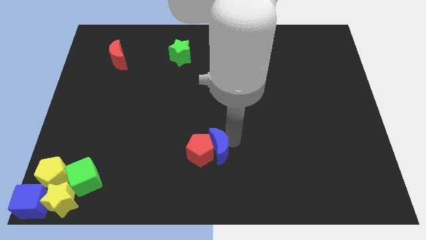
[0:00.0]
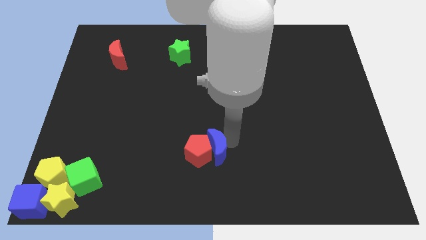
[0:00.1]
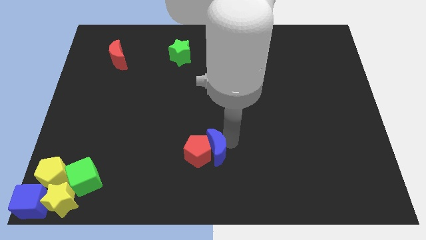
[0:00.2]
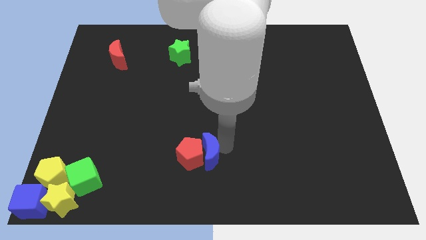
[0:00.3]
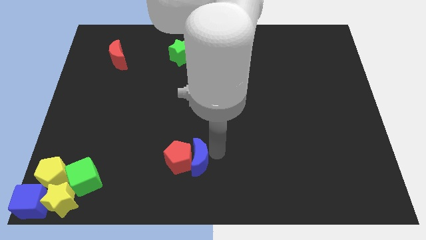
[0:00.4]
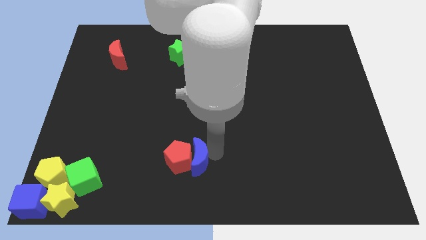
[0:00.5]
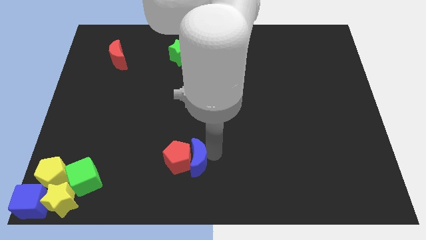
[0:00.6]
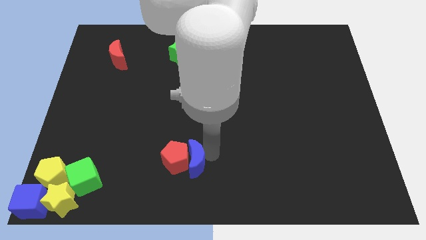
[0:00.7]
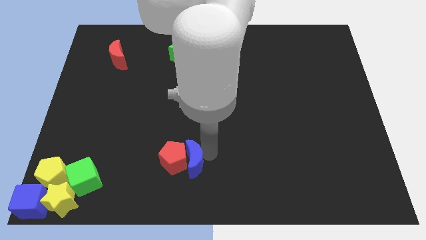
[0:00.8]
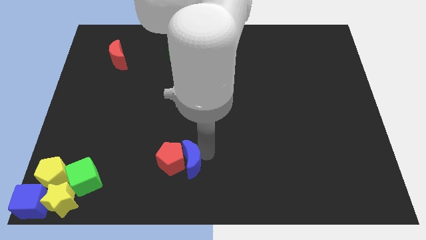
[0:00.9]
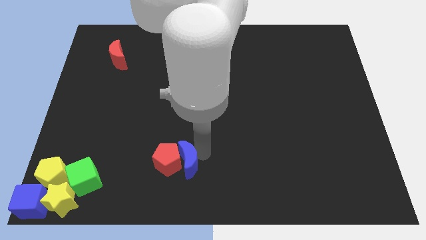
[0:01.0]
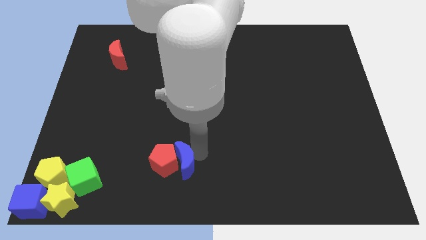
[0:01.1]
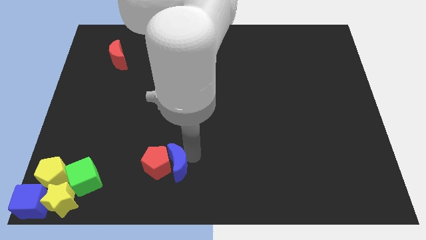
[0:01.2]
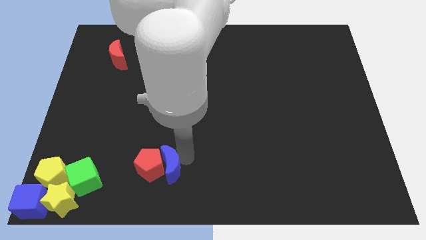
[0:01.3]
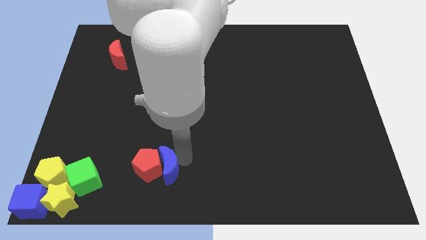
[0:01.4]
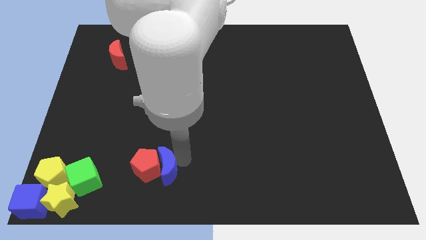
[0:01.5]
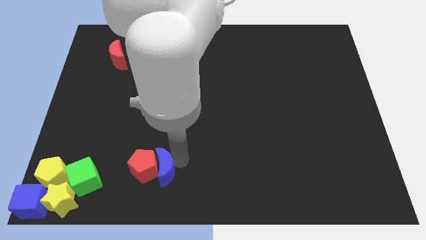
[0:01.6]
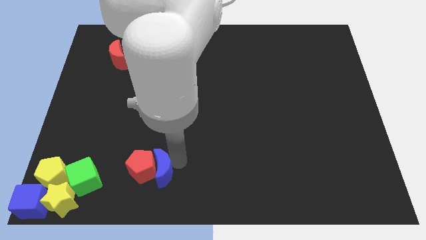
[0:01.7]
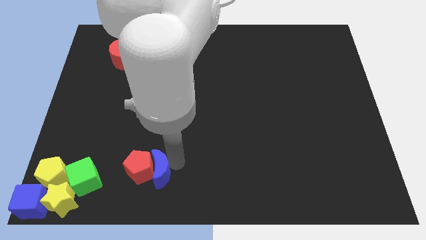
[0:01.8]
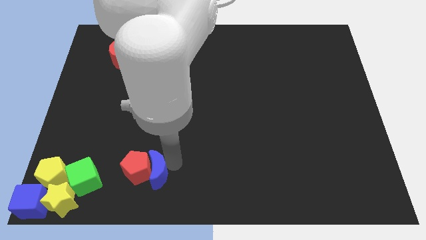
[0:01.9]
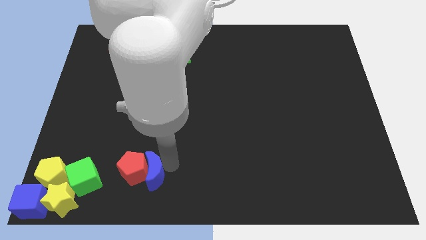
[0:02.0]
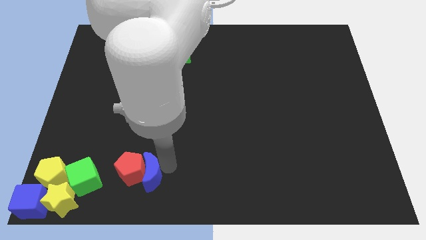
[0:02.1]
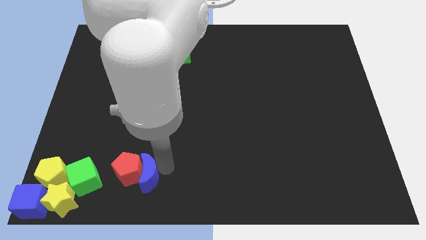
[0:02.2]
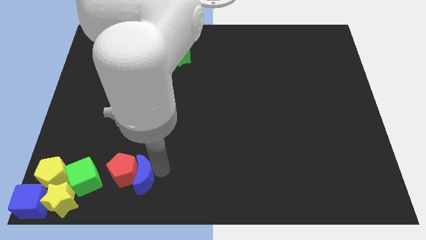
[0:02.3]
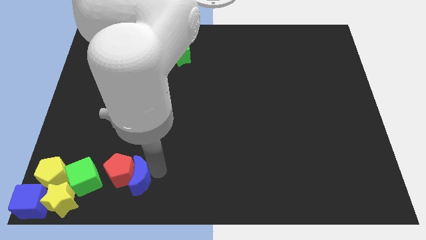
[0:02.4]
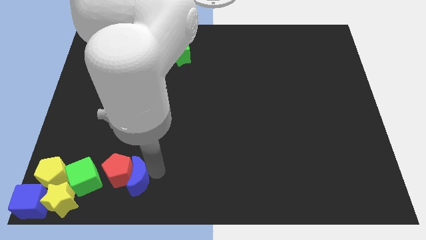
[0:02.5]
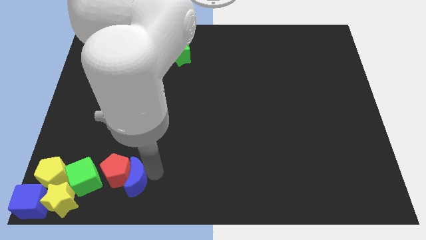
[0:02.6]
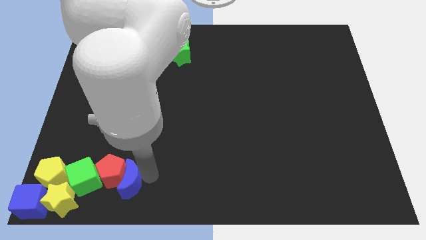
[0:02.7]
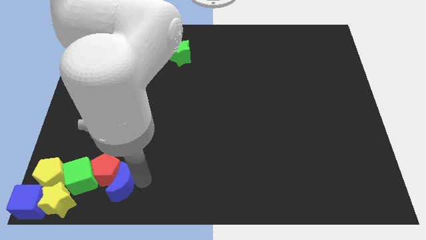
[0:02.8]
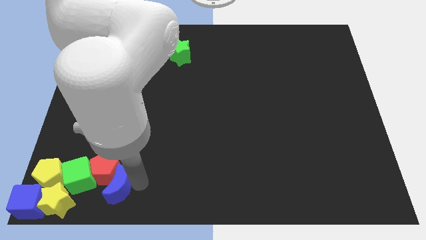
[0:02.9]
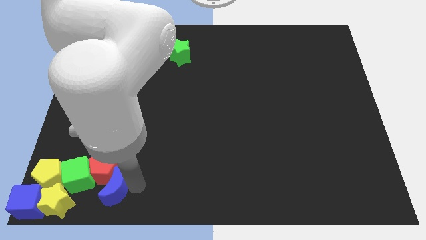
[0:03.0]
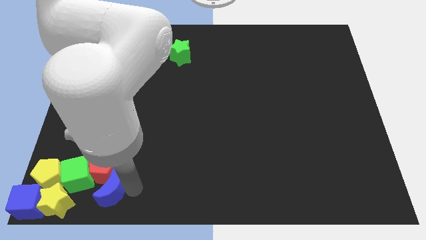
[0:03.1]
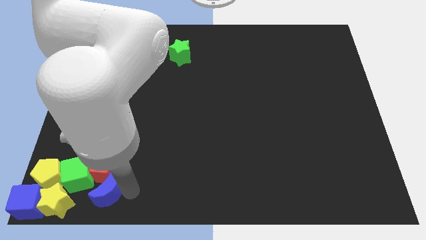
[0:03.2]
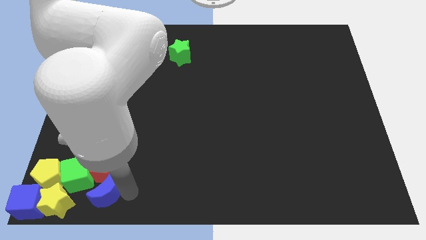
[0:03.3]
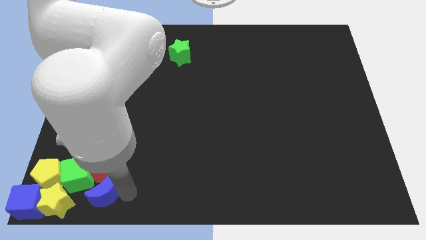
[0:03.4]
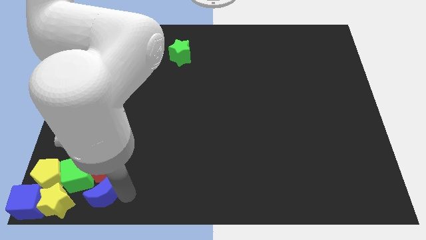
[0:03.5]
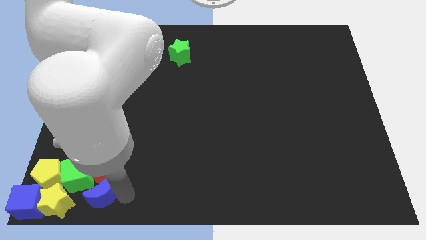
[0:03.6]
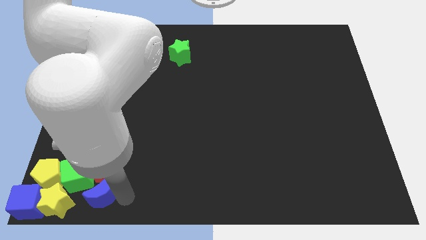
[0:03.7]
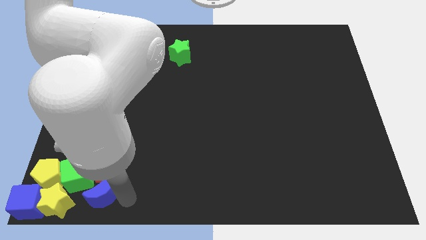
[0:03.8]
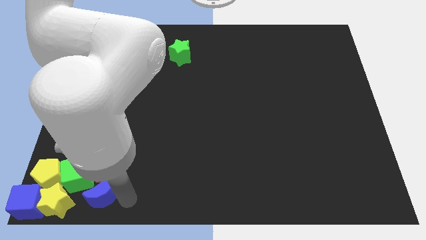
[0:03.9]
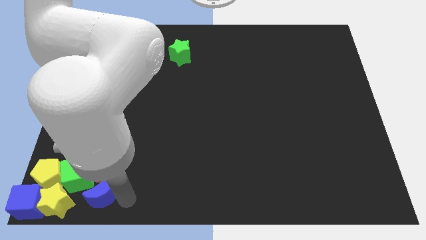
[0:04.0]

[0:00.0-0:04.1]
slide the red pentagon and blue moon to the group of blocks

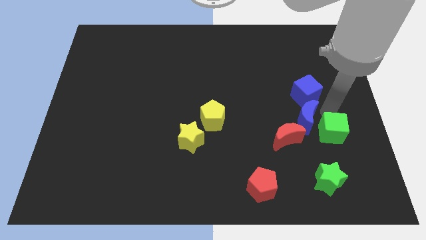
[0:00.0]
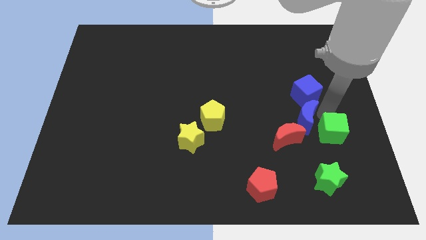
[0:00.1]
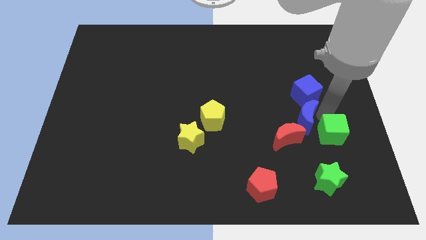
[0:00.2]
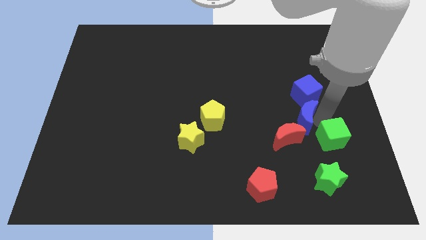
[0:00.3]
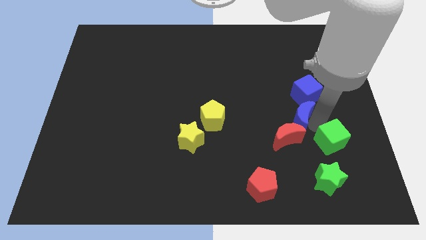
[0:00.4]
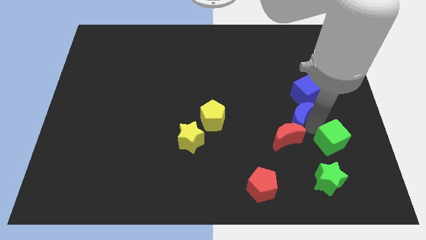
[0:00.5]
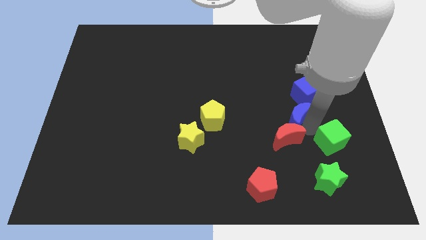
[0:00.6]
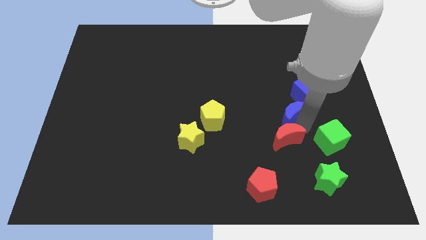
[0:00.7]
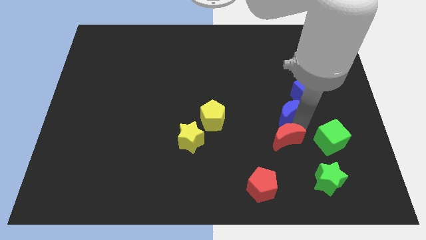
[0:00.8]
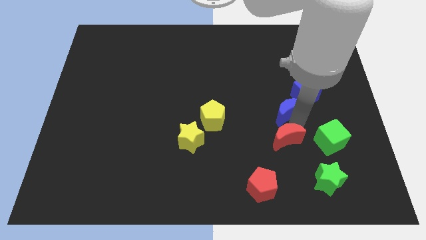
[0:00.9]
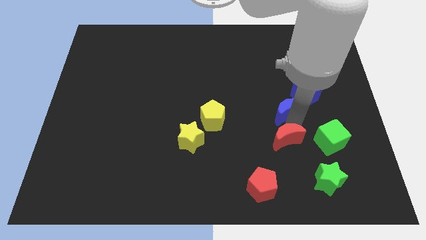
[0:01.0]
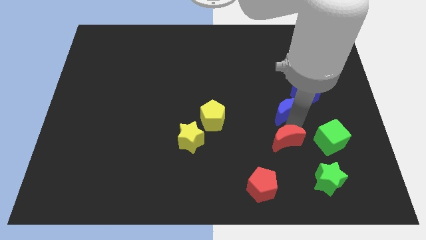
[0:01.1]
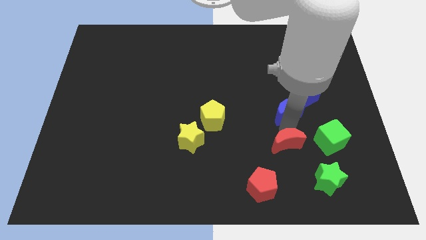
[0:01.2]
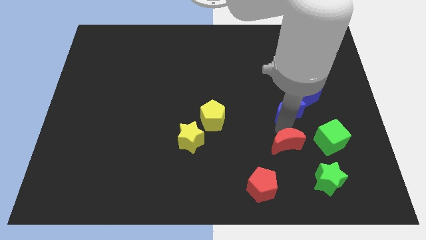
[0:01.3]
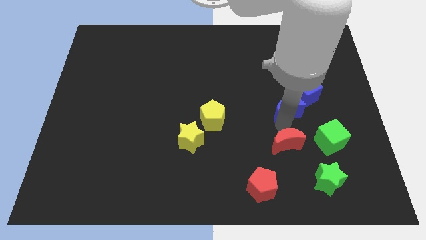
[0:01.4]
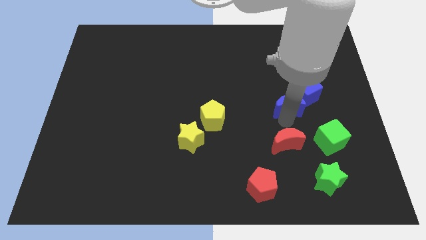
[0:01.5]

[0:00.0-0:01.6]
separate the blue crescent green star and the red crescent

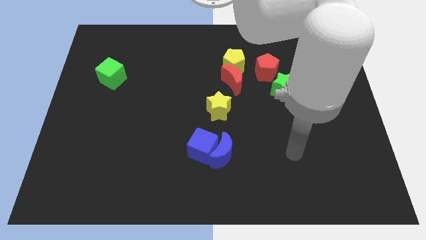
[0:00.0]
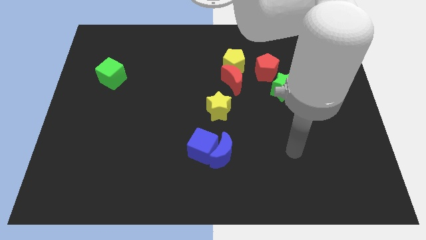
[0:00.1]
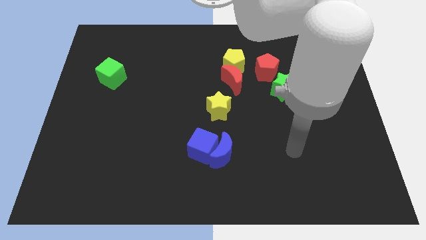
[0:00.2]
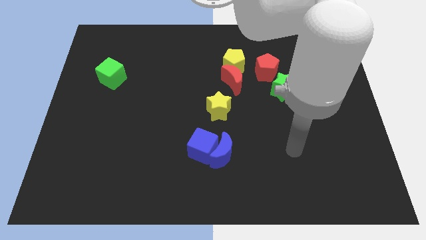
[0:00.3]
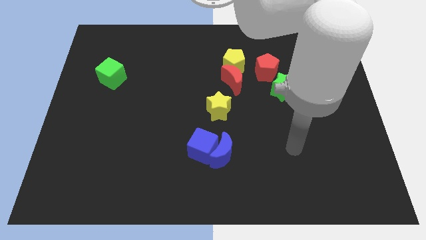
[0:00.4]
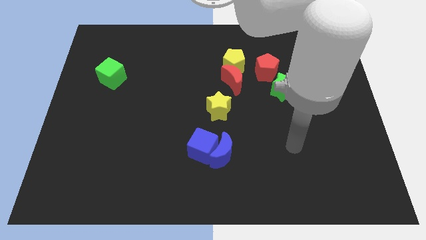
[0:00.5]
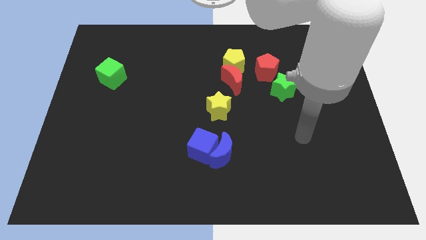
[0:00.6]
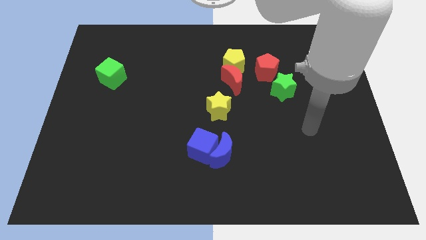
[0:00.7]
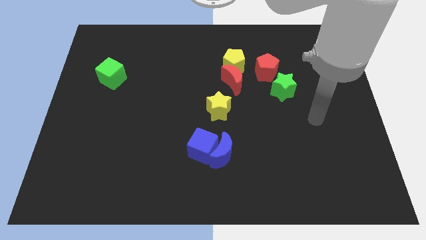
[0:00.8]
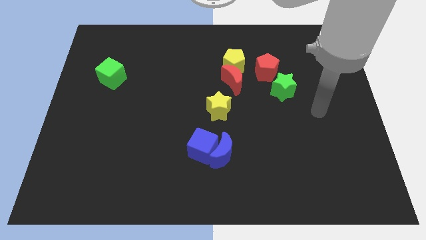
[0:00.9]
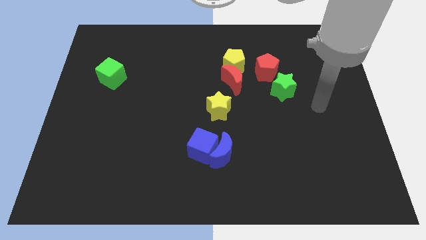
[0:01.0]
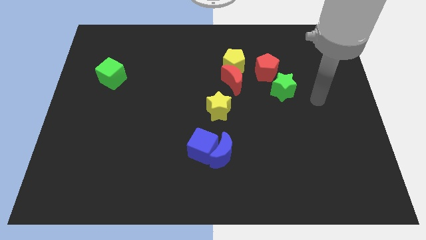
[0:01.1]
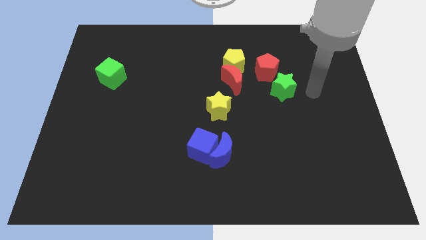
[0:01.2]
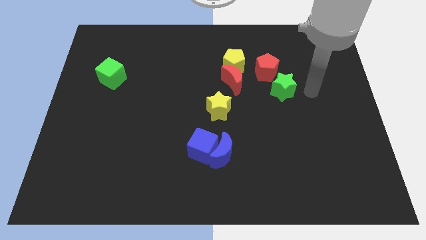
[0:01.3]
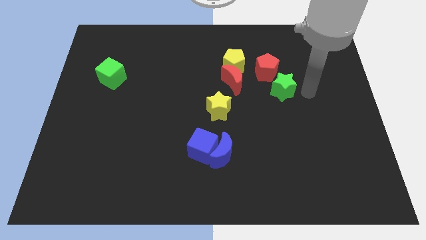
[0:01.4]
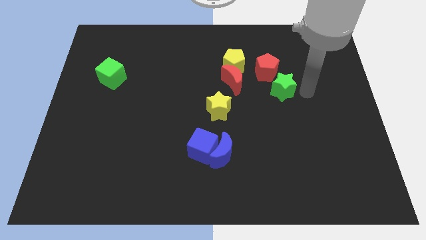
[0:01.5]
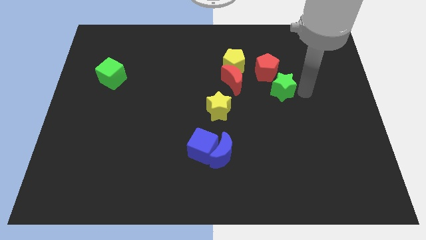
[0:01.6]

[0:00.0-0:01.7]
move the pointer to the right of the green star

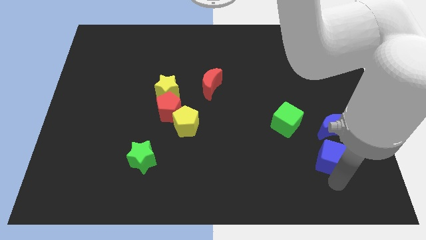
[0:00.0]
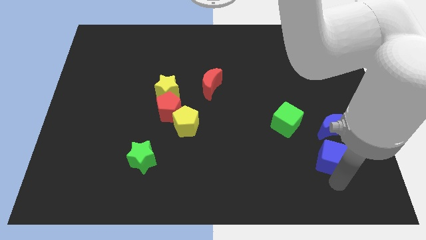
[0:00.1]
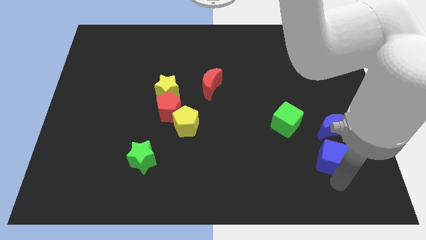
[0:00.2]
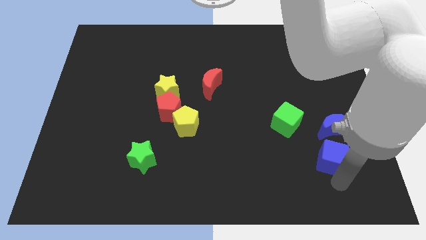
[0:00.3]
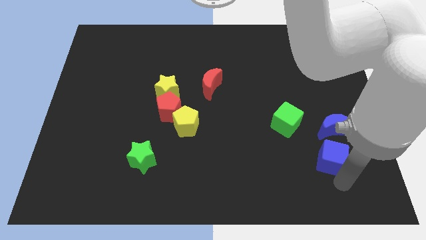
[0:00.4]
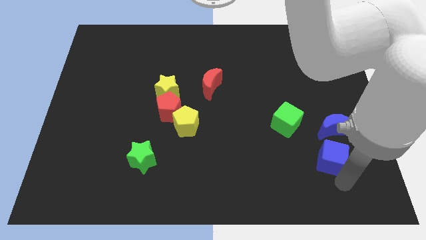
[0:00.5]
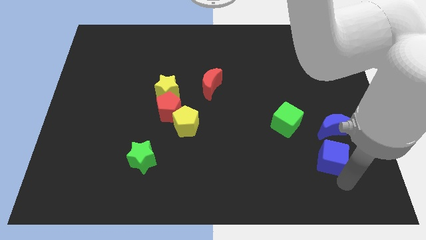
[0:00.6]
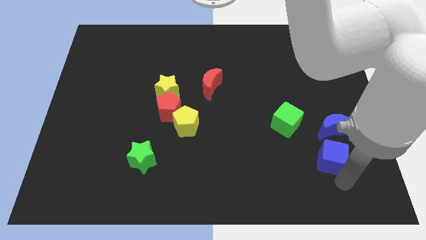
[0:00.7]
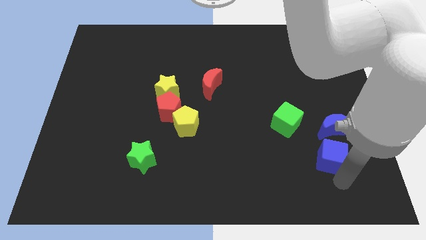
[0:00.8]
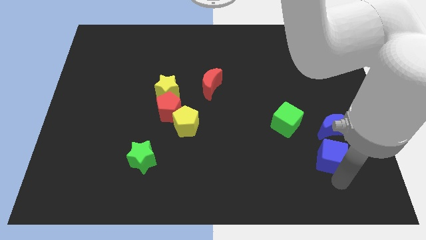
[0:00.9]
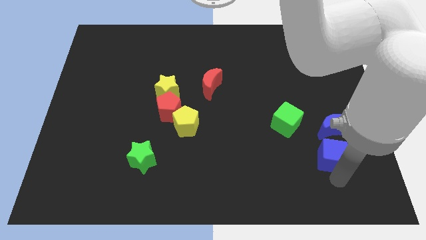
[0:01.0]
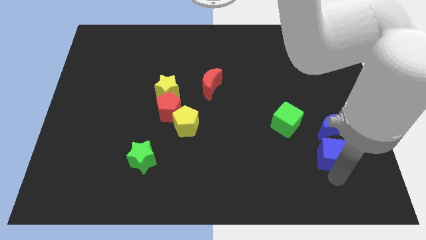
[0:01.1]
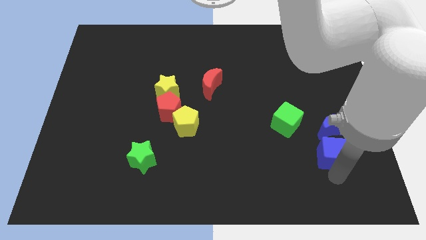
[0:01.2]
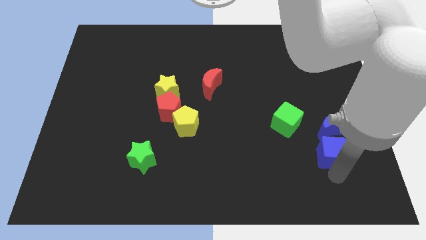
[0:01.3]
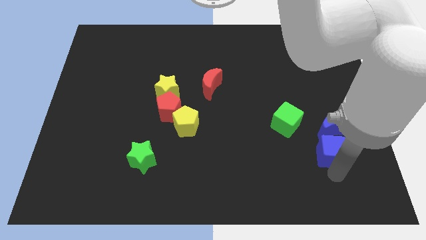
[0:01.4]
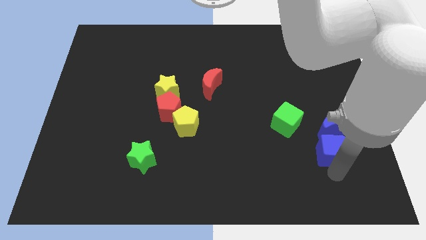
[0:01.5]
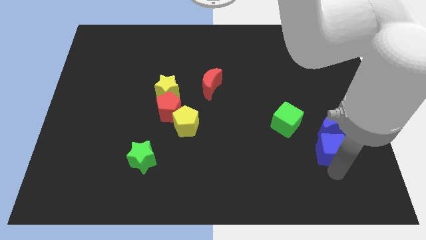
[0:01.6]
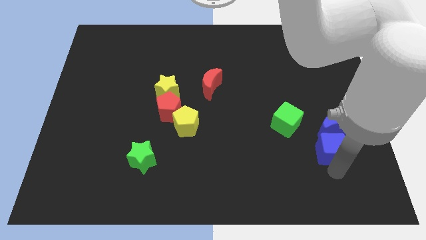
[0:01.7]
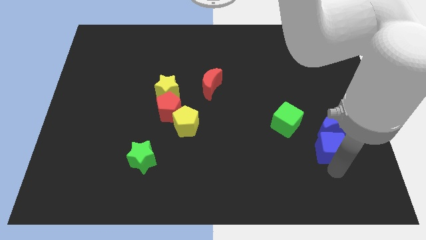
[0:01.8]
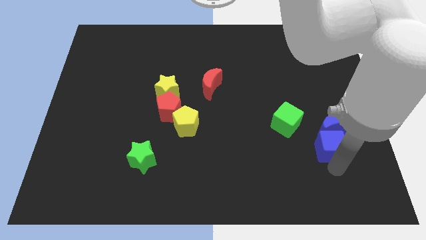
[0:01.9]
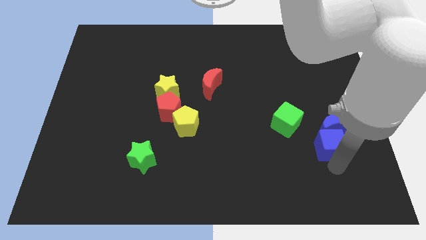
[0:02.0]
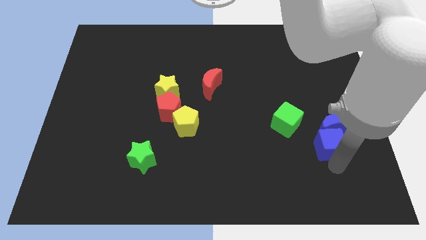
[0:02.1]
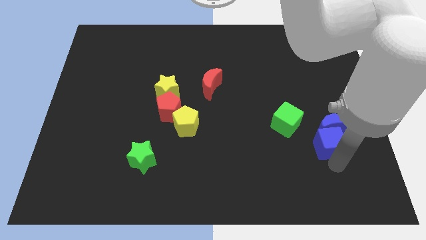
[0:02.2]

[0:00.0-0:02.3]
push the blue cube into the blue crescent
